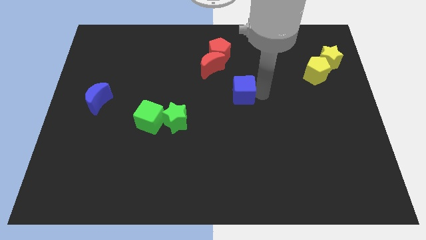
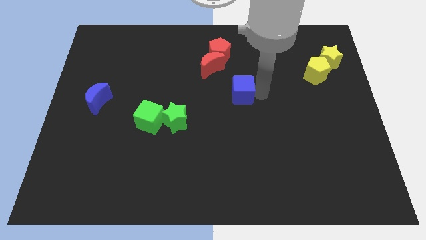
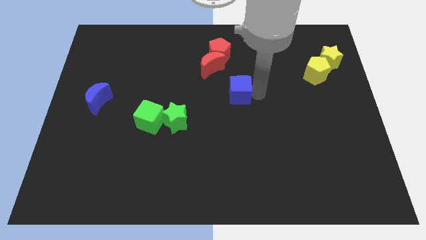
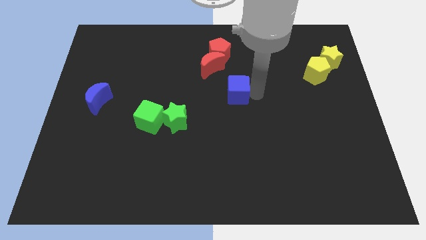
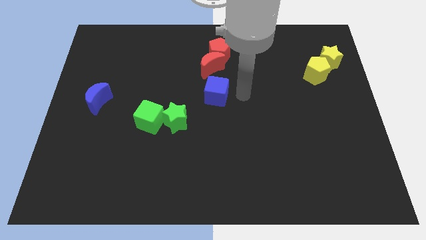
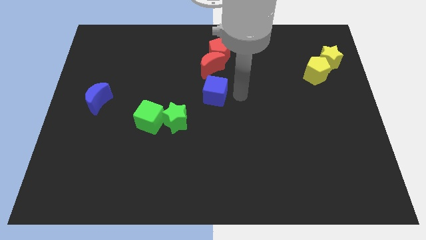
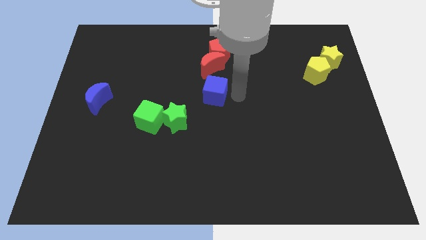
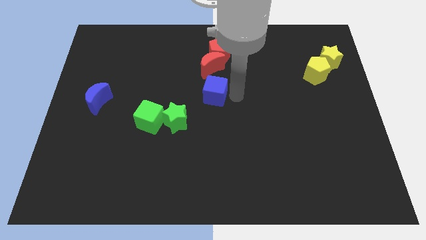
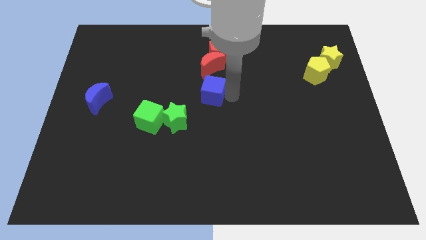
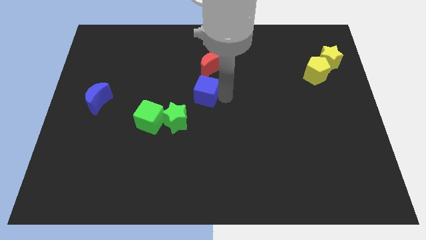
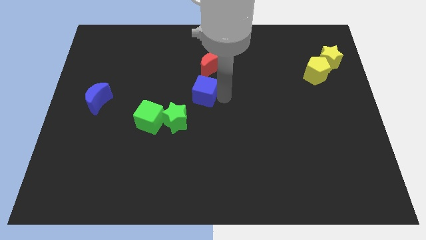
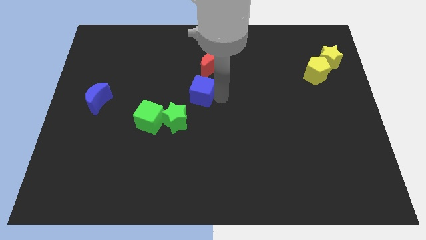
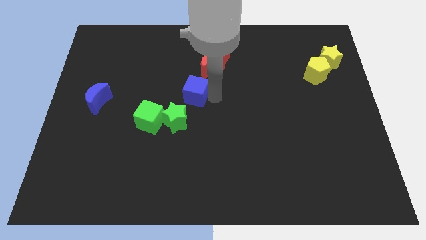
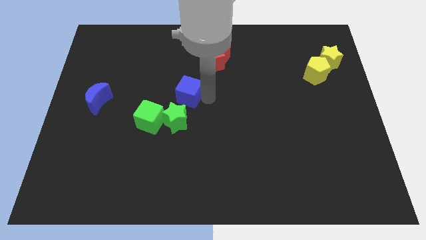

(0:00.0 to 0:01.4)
place the blue cube in between the red crescent and green star

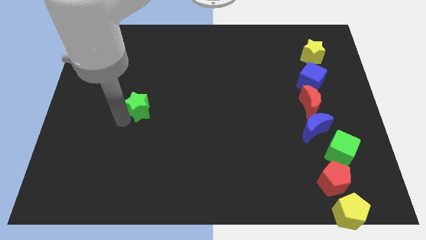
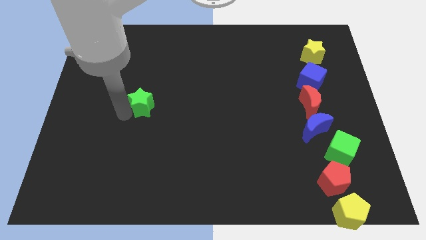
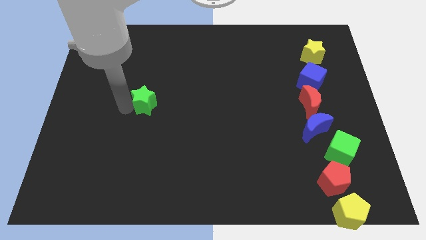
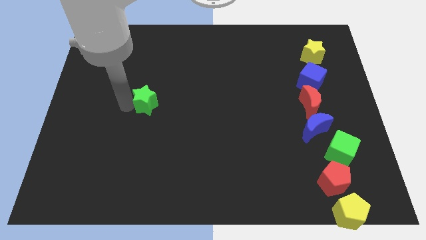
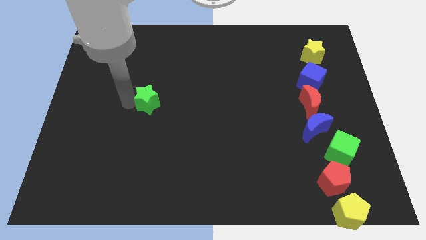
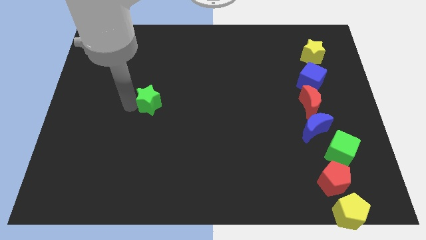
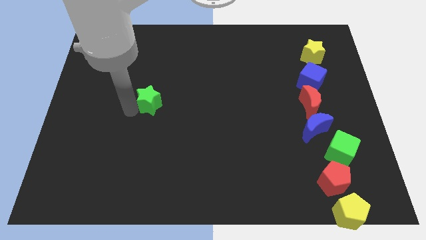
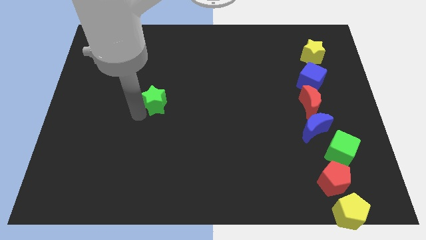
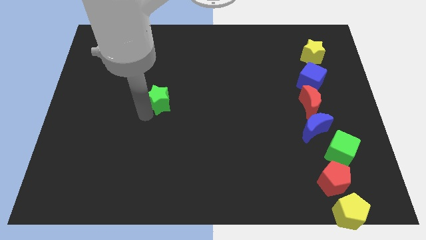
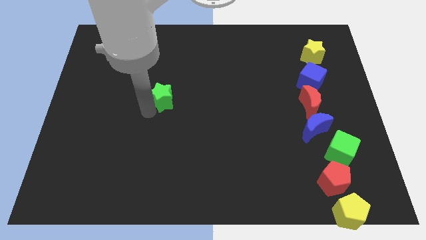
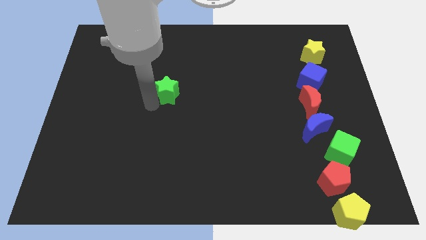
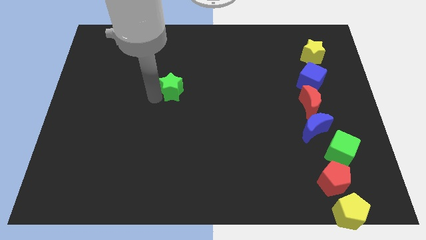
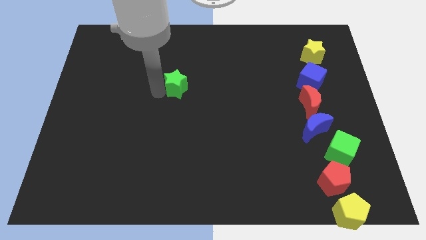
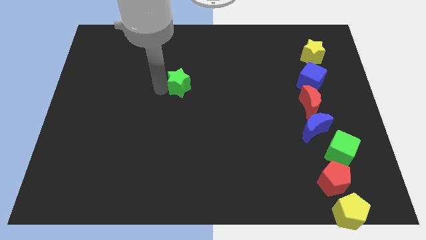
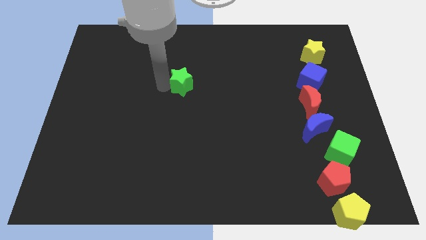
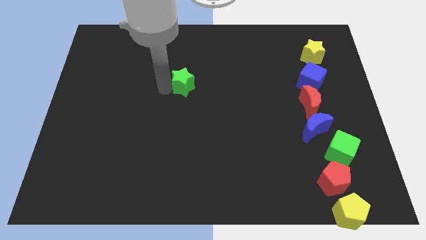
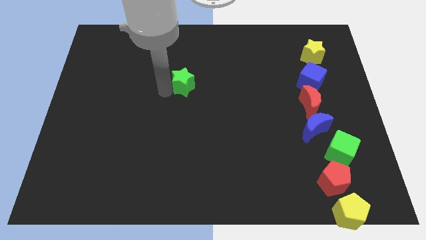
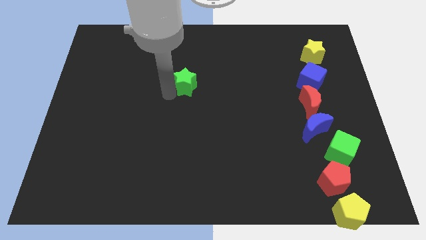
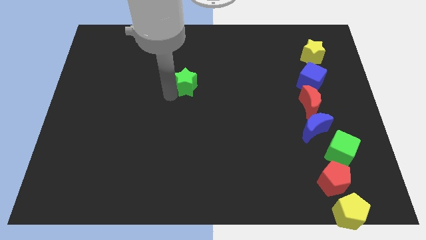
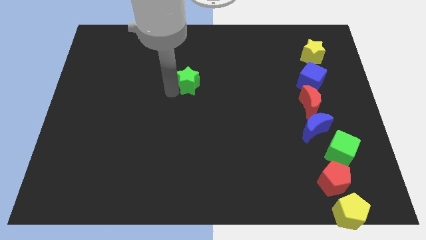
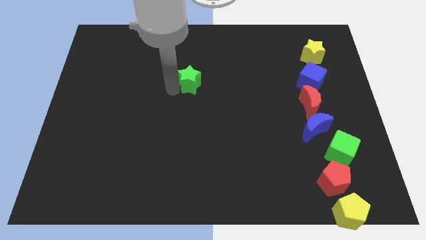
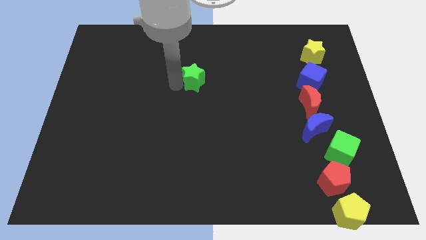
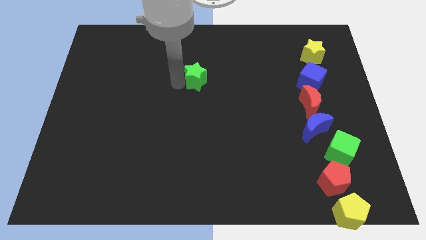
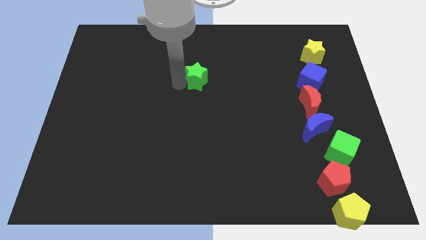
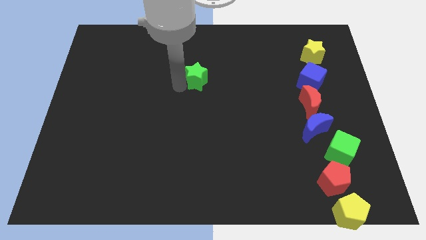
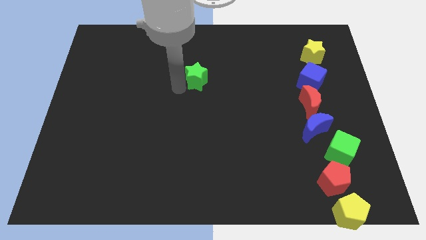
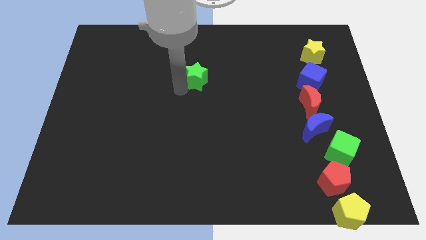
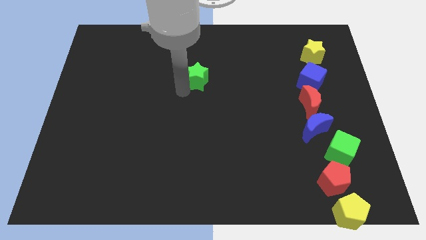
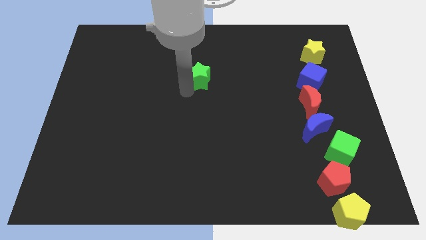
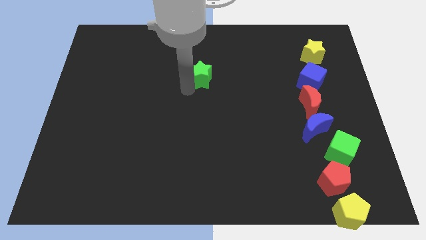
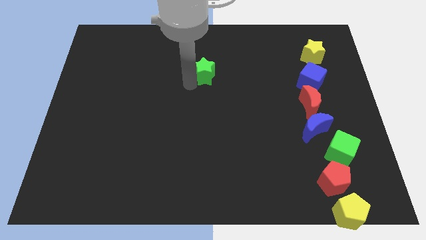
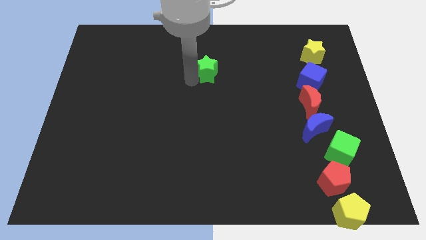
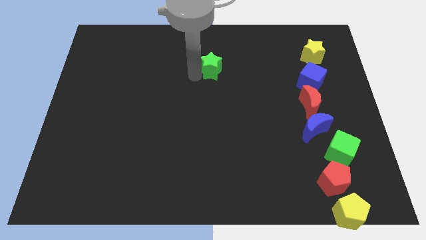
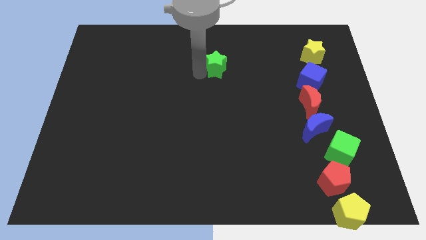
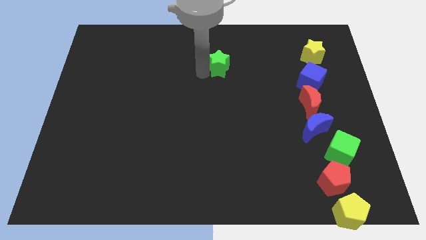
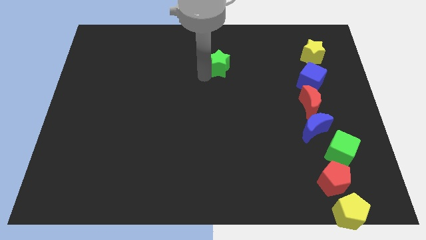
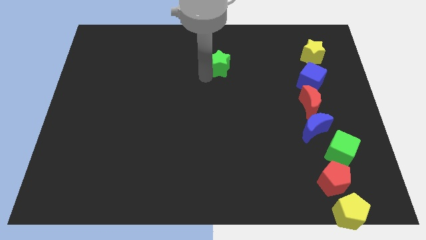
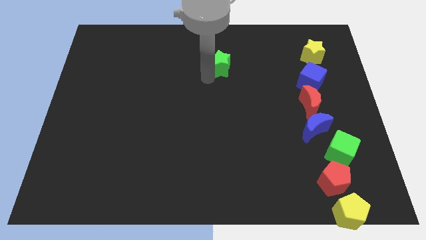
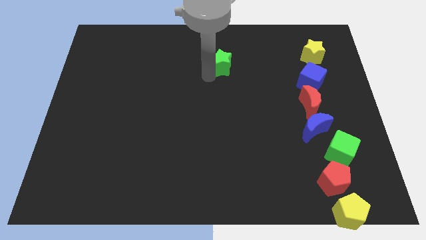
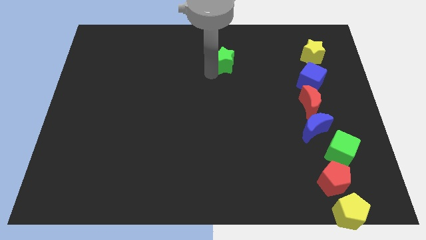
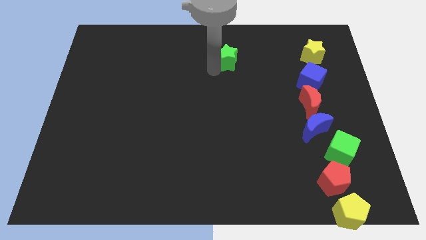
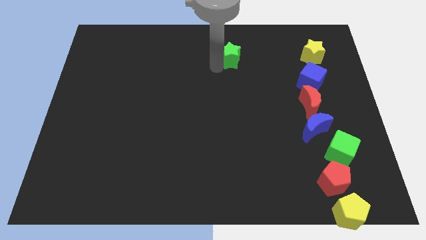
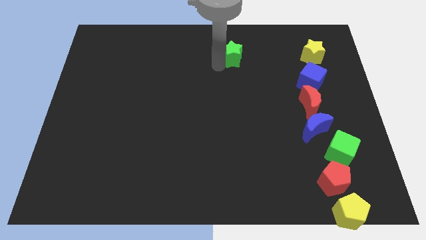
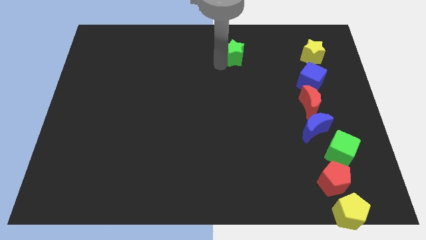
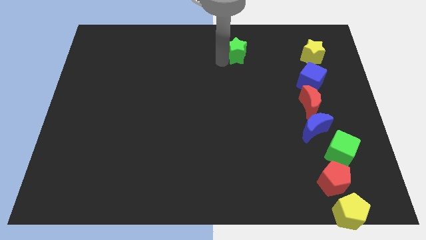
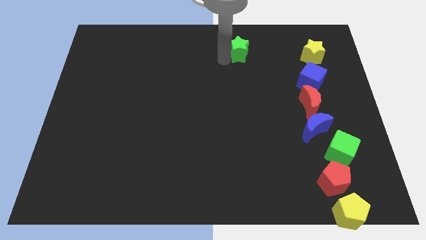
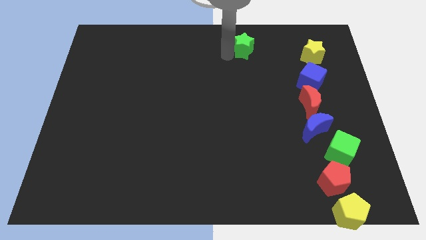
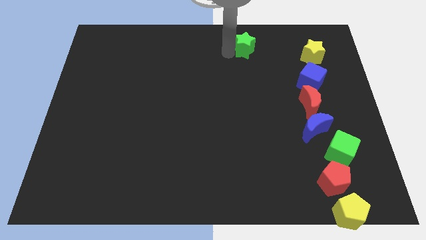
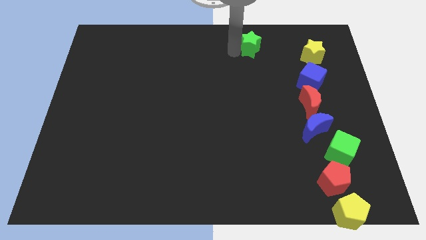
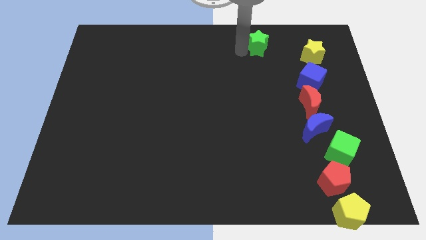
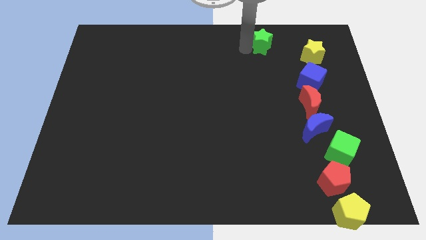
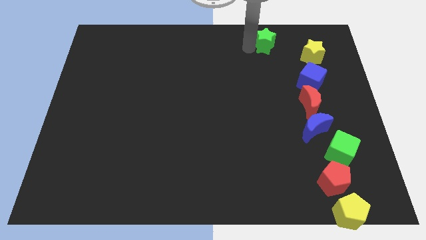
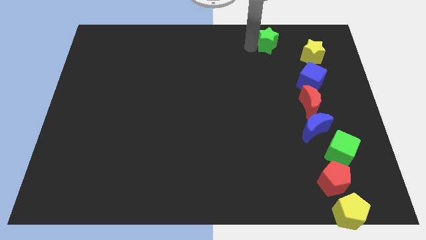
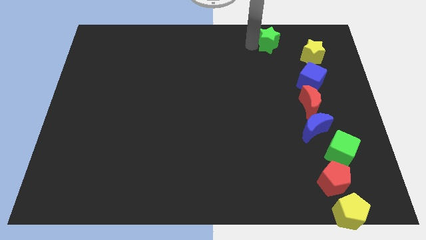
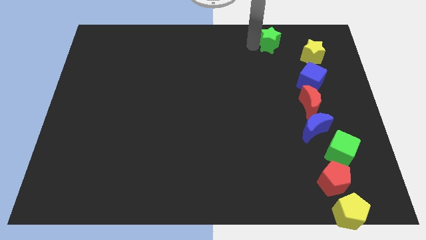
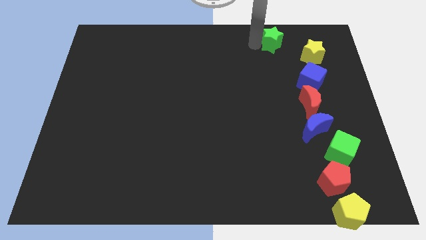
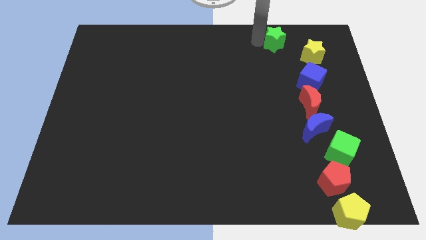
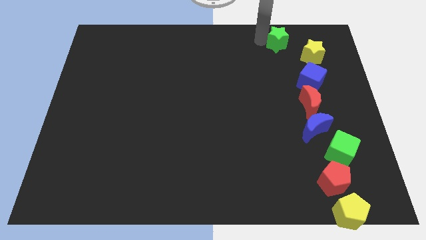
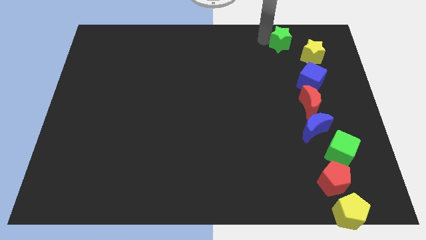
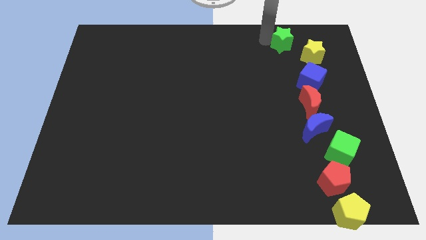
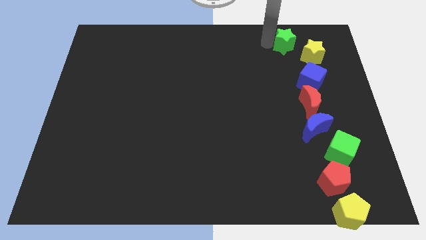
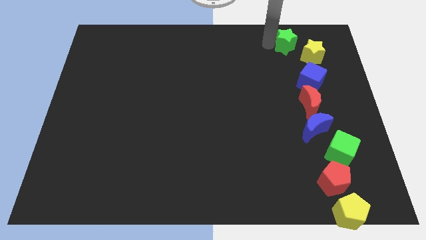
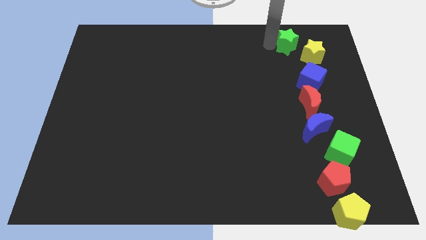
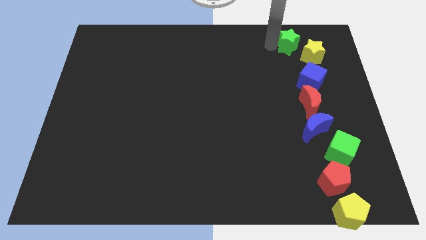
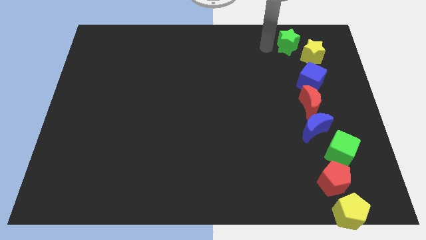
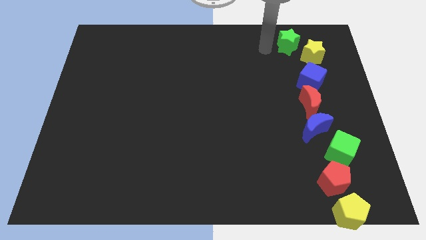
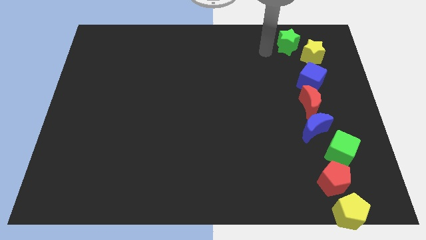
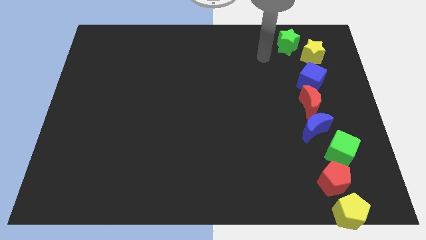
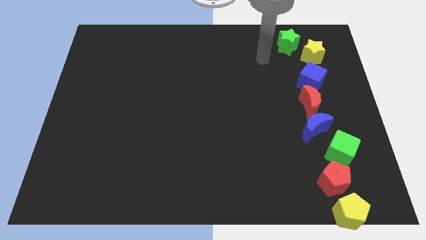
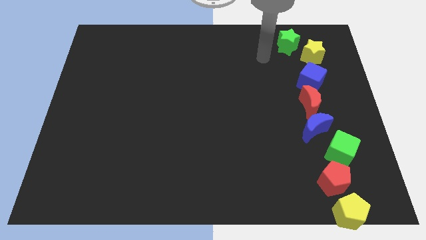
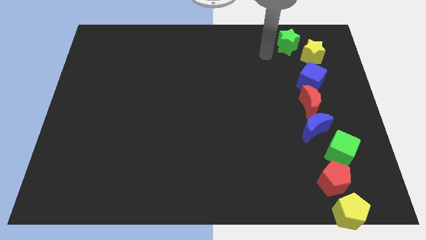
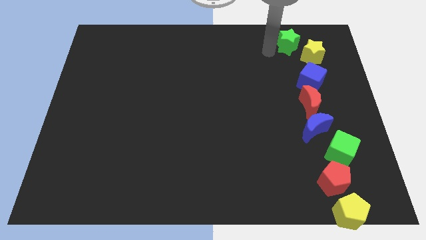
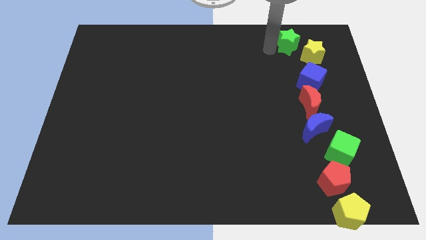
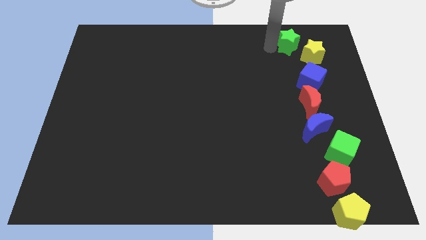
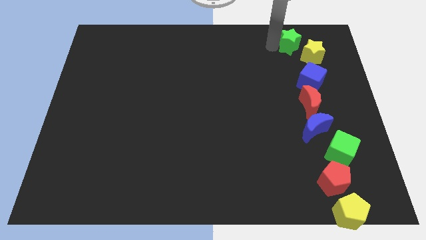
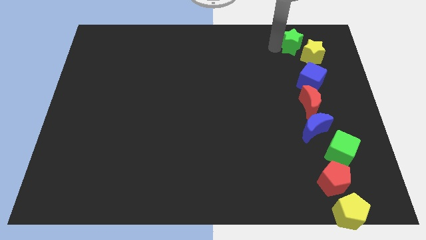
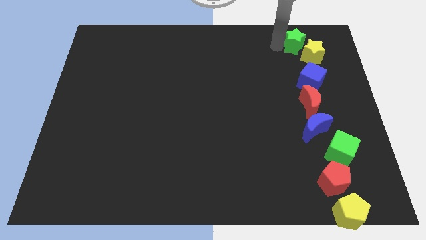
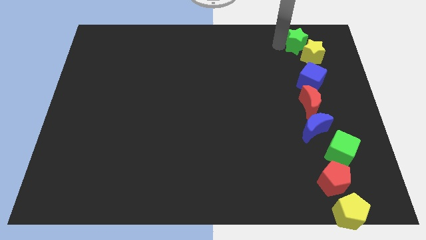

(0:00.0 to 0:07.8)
move the green star to the top left of the yellow star
